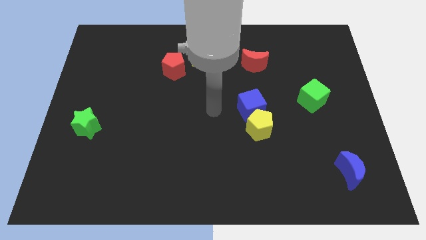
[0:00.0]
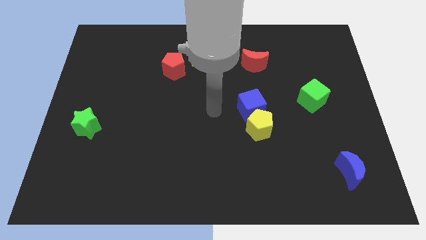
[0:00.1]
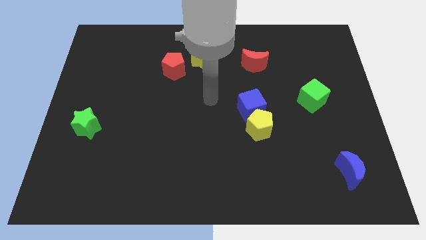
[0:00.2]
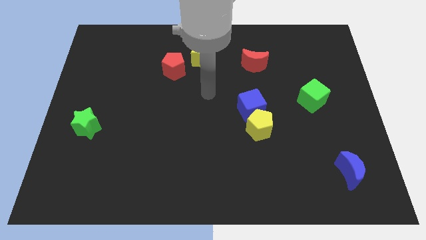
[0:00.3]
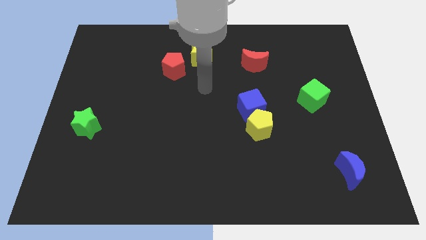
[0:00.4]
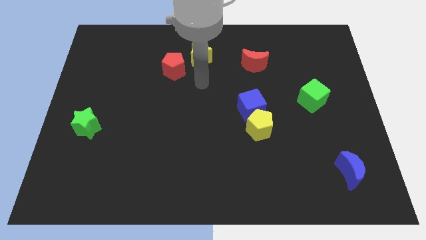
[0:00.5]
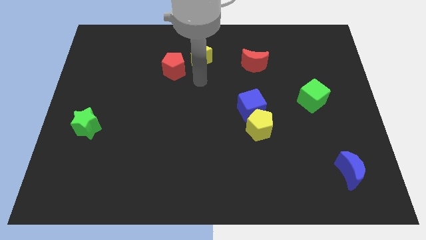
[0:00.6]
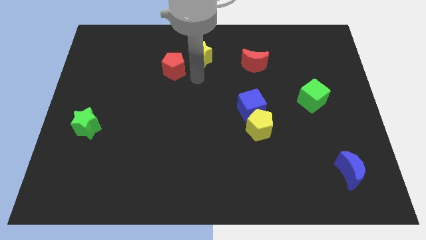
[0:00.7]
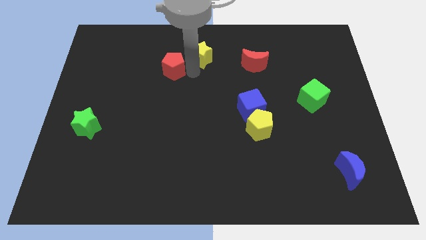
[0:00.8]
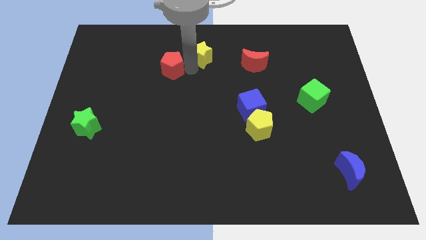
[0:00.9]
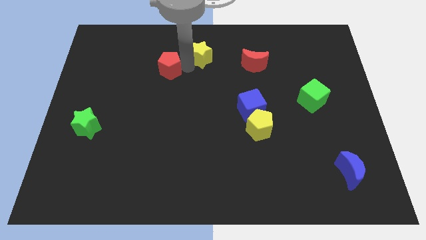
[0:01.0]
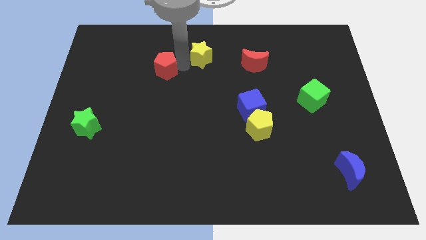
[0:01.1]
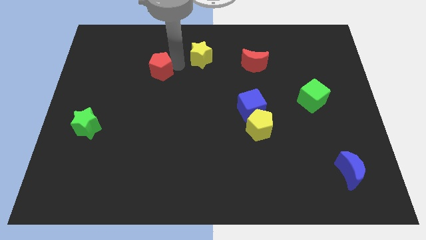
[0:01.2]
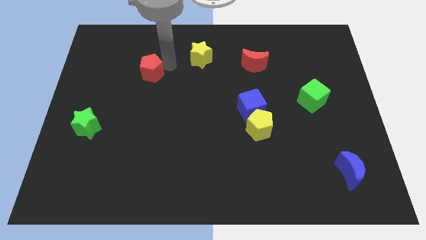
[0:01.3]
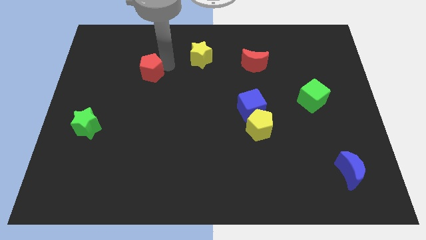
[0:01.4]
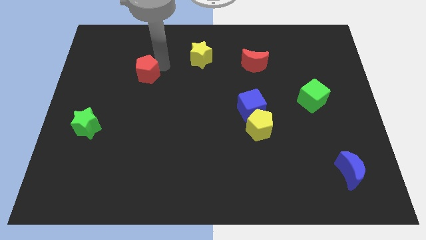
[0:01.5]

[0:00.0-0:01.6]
move the red pentagon to the left

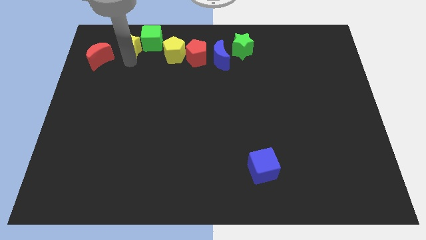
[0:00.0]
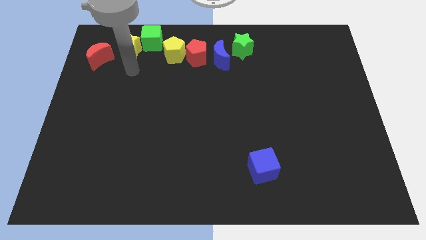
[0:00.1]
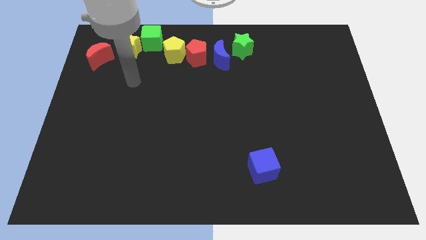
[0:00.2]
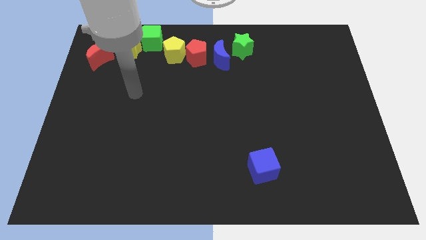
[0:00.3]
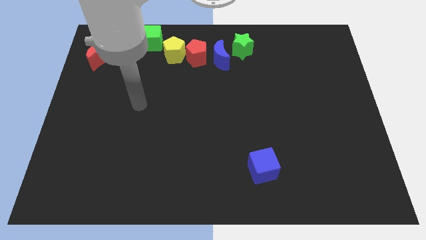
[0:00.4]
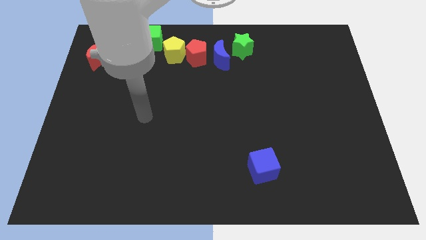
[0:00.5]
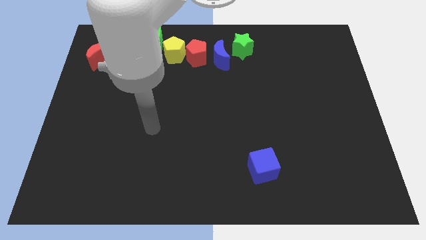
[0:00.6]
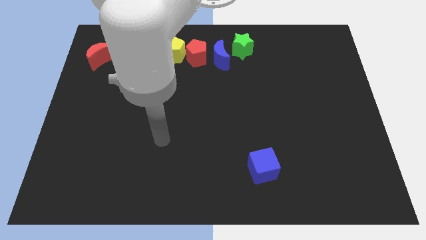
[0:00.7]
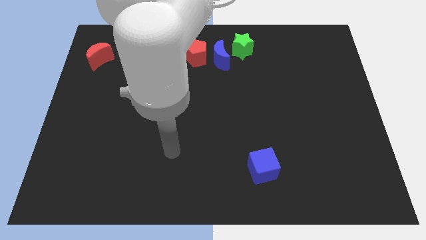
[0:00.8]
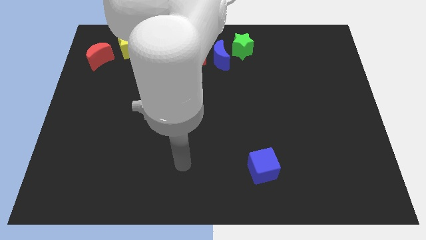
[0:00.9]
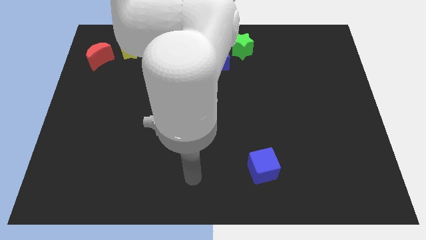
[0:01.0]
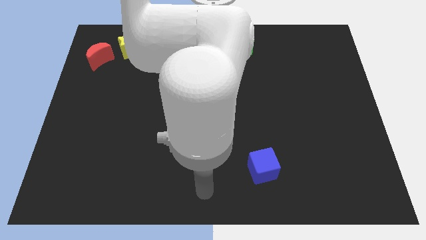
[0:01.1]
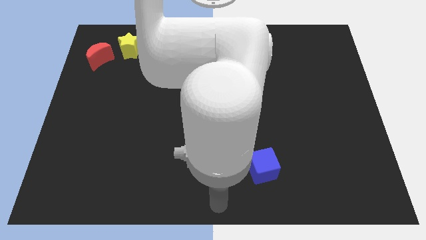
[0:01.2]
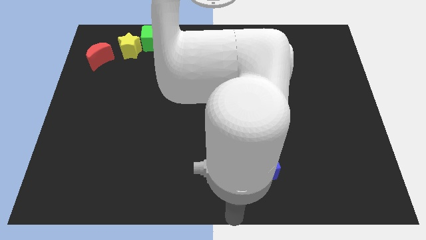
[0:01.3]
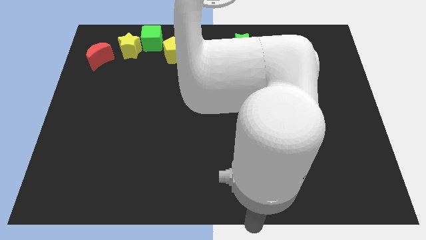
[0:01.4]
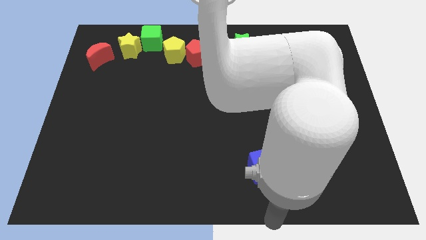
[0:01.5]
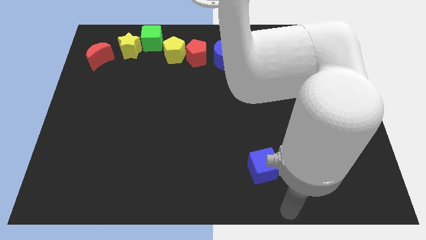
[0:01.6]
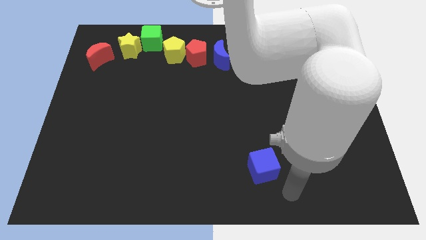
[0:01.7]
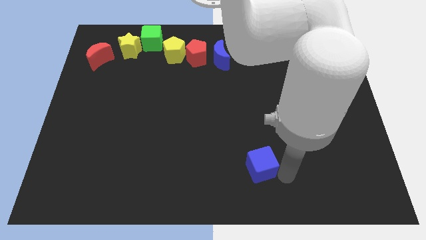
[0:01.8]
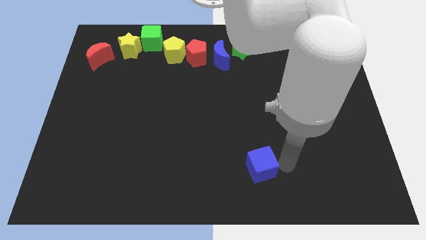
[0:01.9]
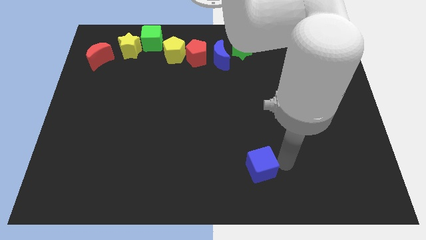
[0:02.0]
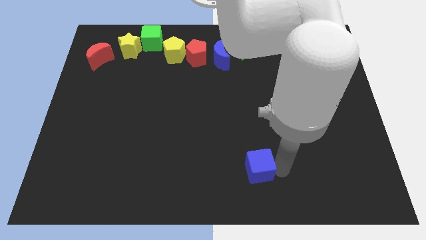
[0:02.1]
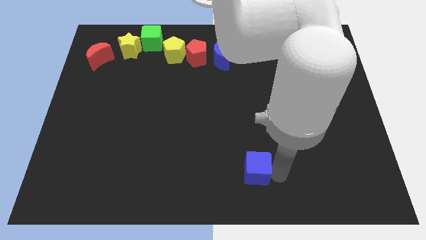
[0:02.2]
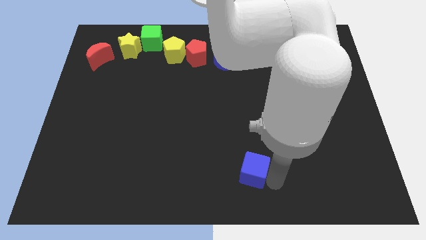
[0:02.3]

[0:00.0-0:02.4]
move the arm away from the yellow star

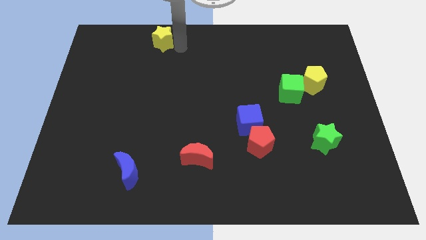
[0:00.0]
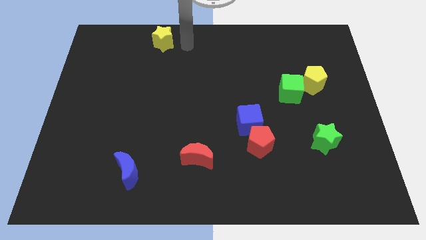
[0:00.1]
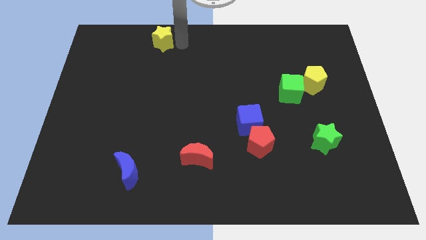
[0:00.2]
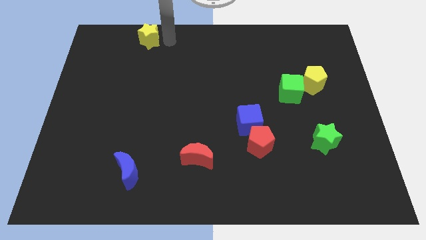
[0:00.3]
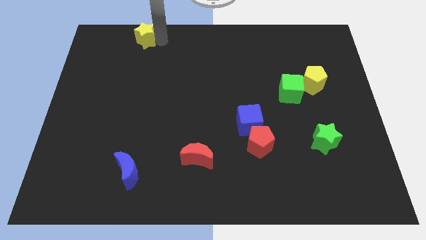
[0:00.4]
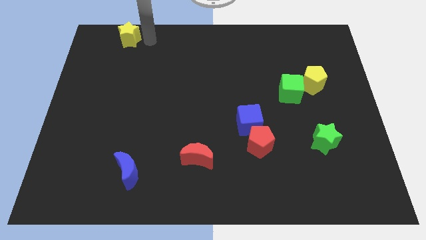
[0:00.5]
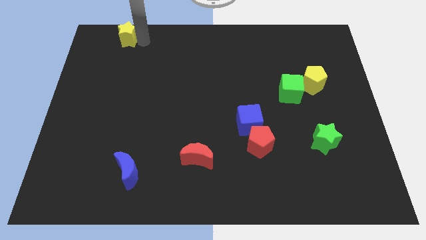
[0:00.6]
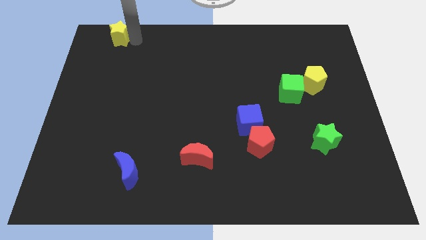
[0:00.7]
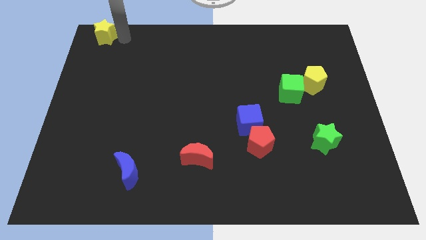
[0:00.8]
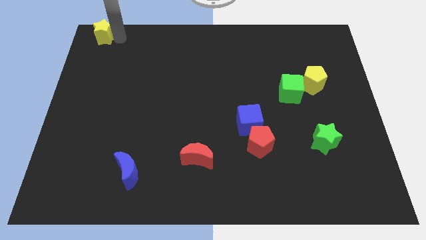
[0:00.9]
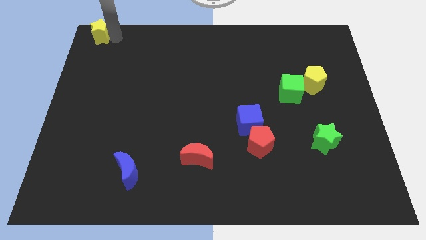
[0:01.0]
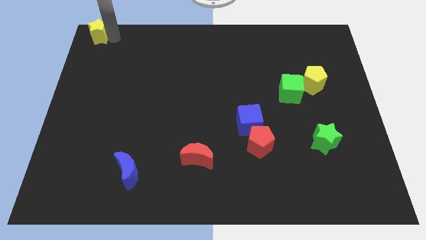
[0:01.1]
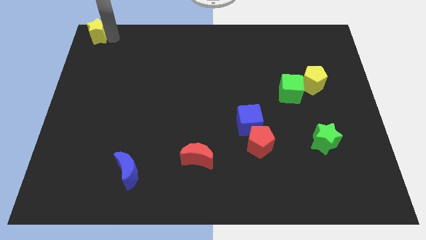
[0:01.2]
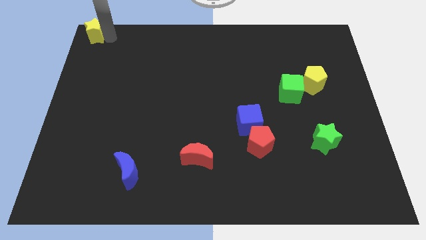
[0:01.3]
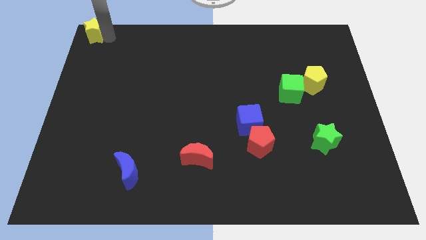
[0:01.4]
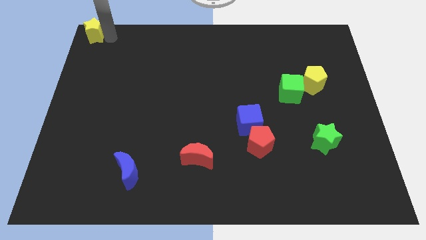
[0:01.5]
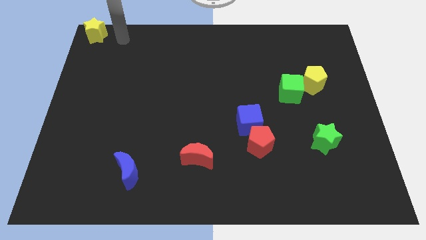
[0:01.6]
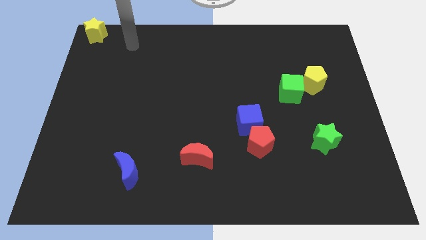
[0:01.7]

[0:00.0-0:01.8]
move the yellow star to the top left corner

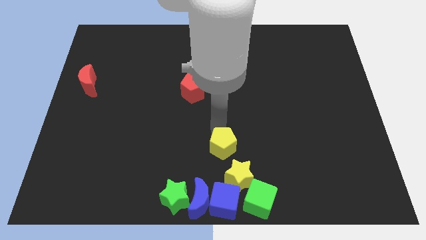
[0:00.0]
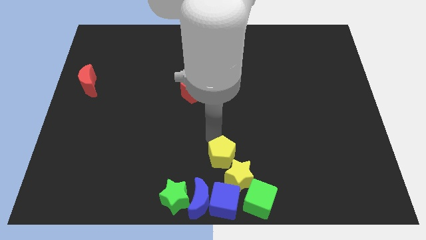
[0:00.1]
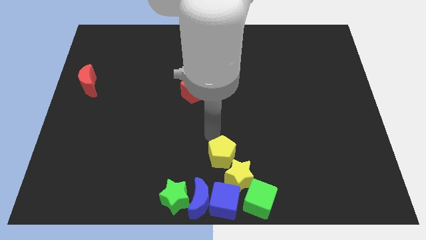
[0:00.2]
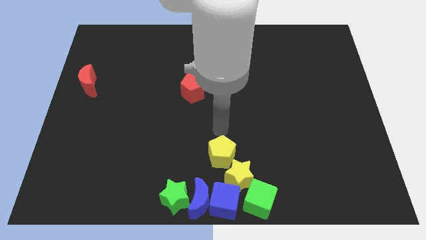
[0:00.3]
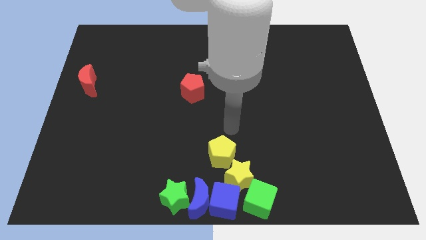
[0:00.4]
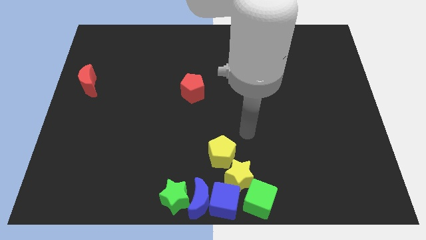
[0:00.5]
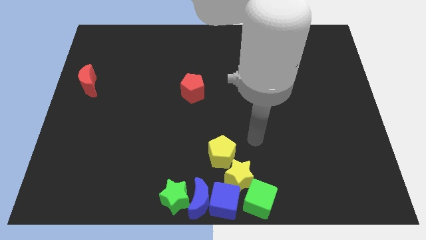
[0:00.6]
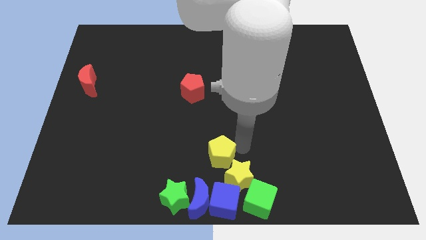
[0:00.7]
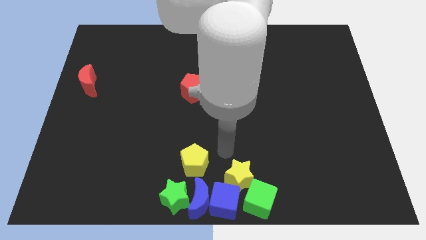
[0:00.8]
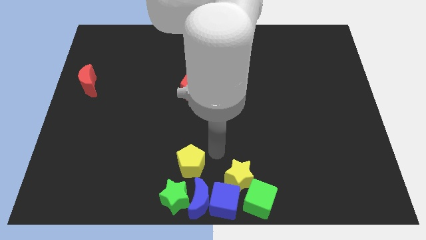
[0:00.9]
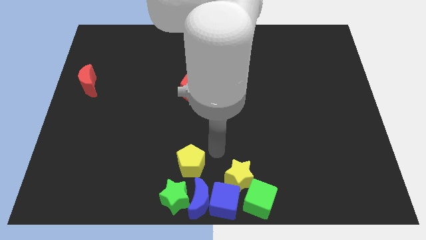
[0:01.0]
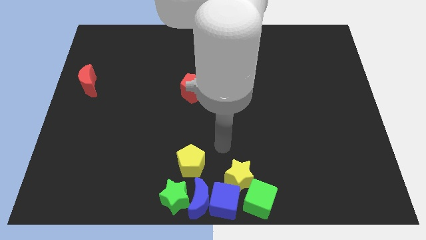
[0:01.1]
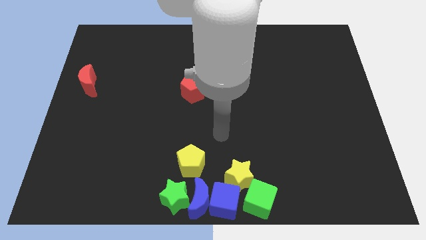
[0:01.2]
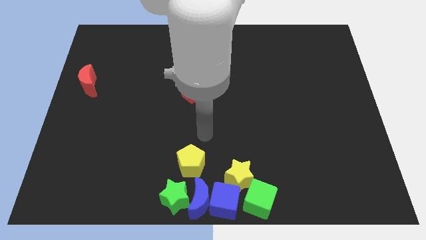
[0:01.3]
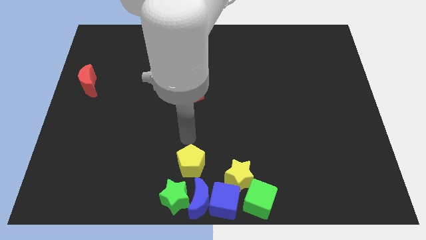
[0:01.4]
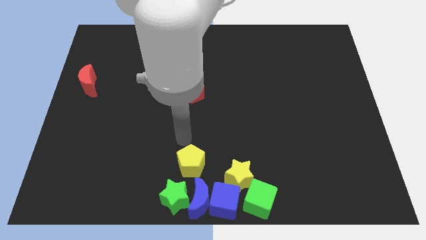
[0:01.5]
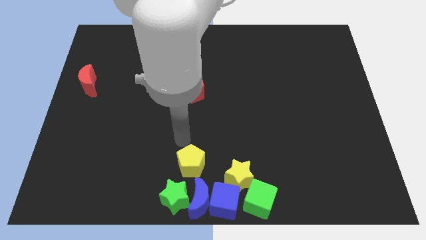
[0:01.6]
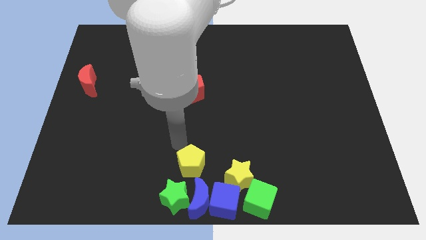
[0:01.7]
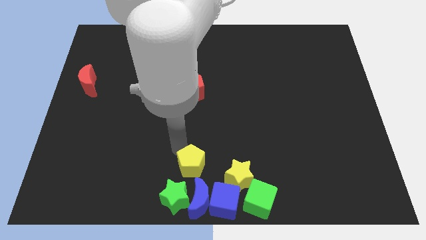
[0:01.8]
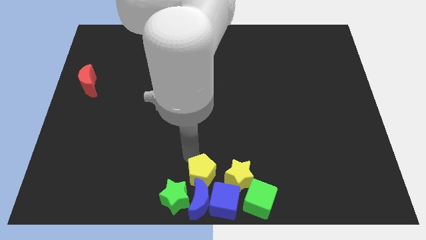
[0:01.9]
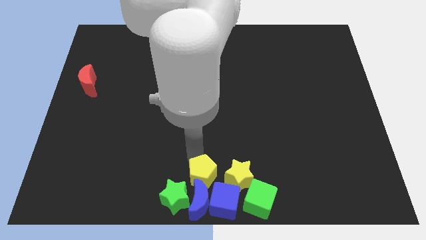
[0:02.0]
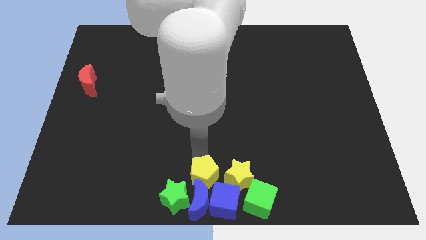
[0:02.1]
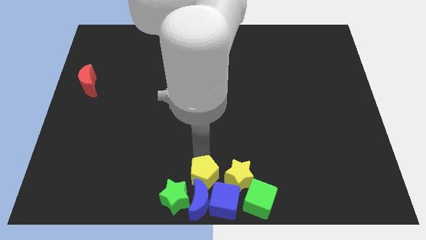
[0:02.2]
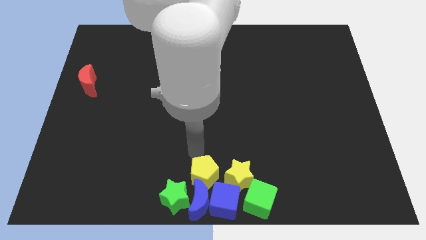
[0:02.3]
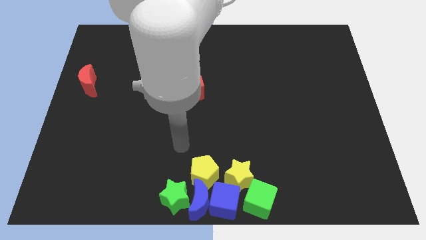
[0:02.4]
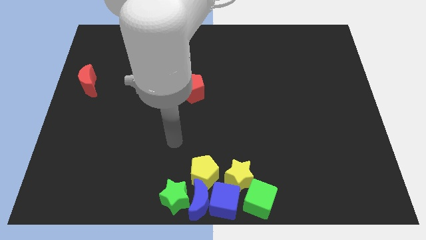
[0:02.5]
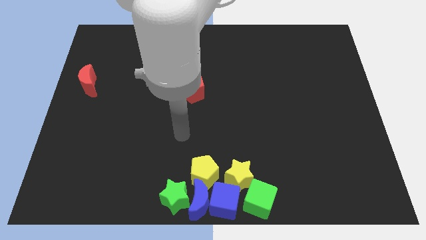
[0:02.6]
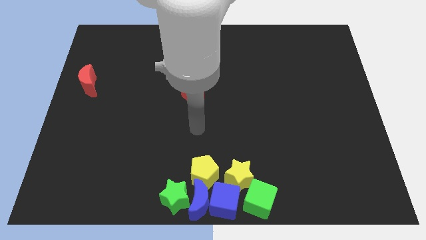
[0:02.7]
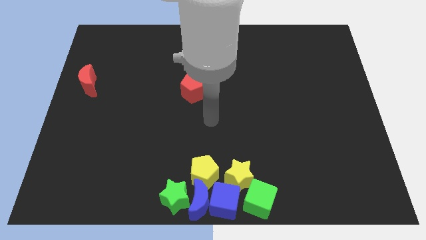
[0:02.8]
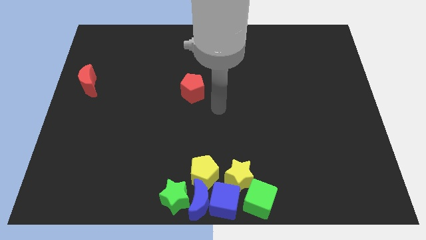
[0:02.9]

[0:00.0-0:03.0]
place the yellow pentagon left to the yellow star

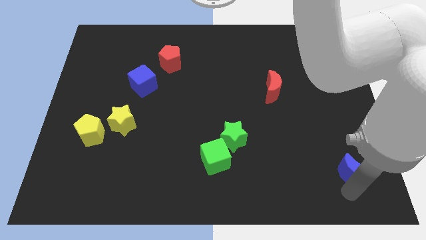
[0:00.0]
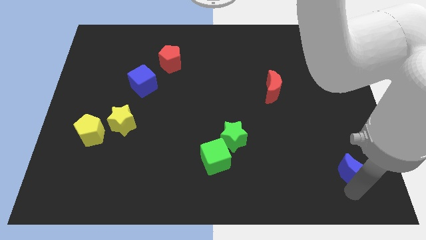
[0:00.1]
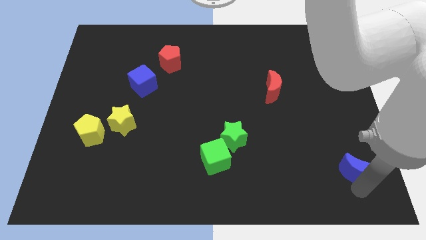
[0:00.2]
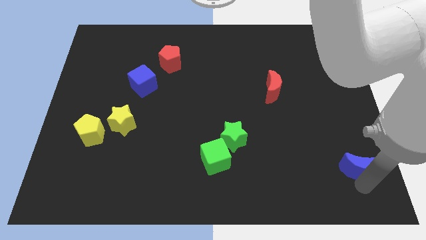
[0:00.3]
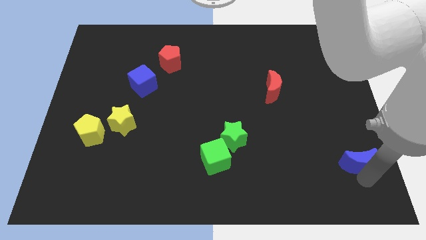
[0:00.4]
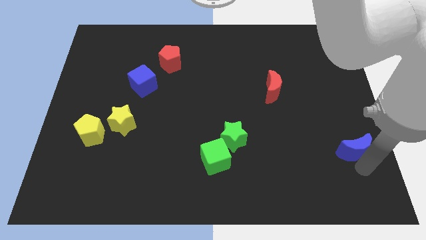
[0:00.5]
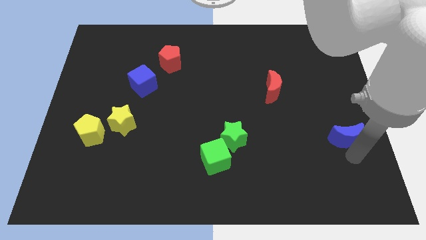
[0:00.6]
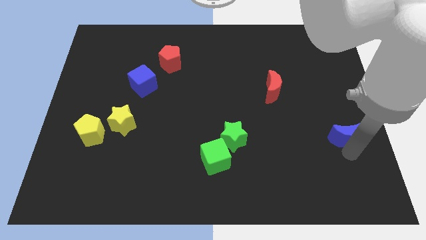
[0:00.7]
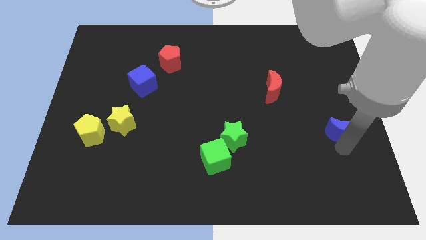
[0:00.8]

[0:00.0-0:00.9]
slightly push the blue moon up
